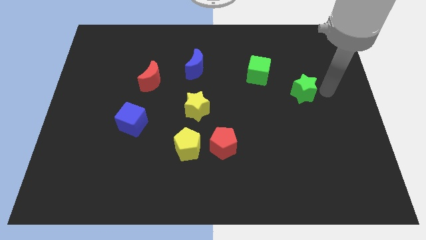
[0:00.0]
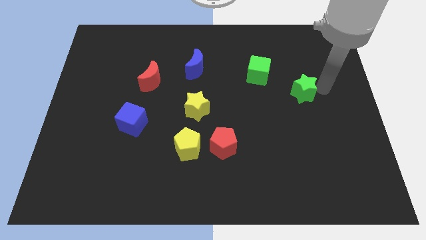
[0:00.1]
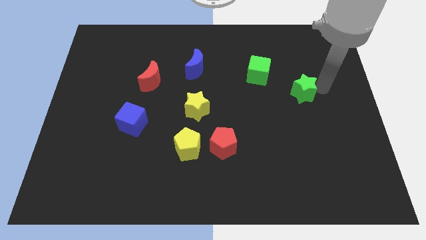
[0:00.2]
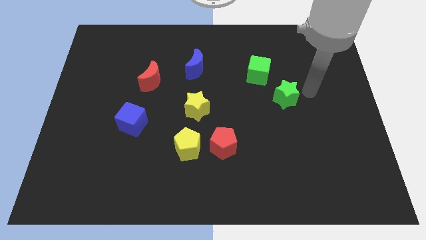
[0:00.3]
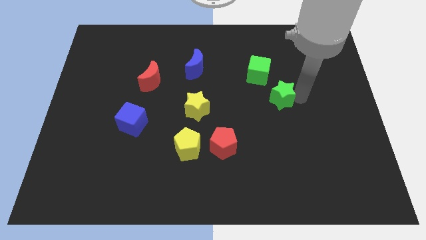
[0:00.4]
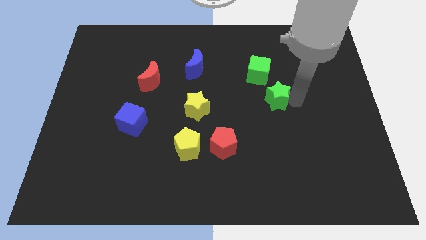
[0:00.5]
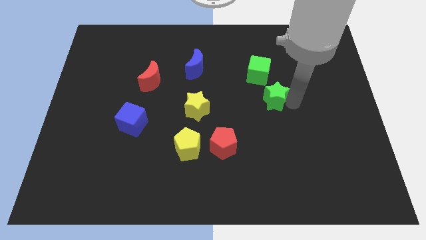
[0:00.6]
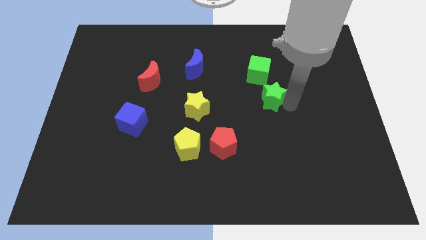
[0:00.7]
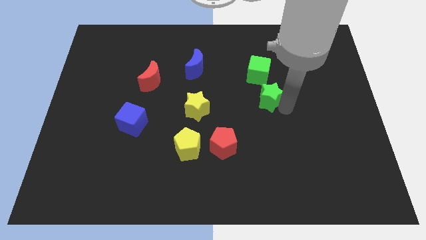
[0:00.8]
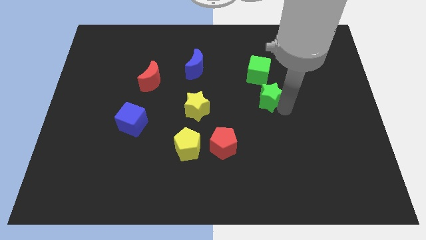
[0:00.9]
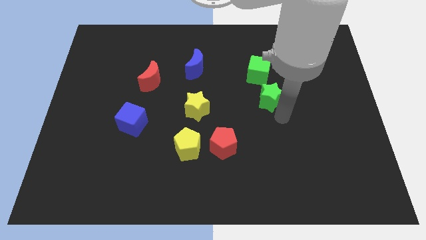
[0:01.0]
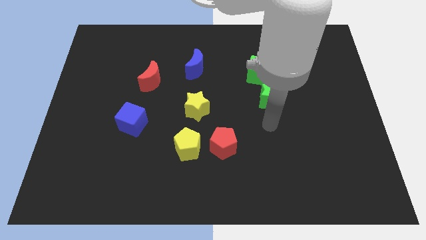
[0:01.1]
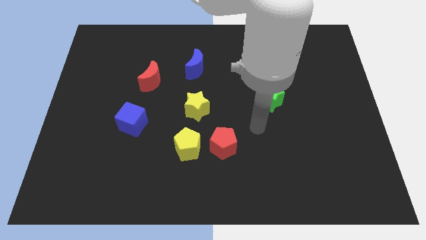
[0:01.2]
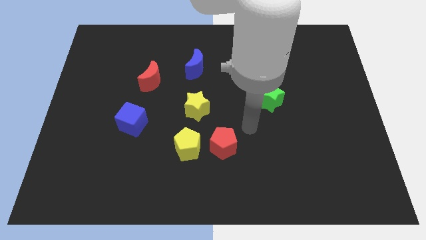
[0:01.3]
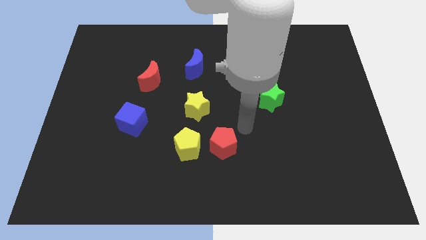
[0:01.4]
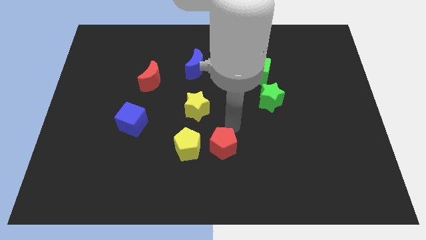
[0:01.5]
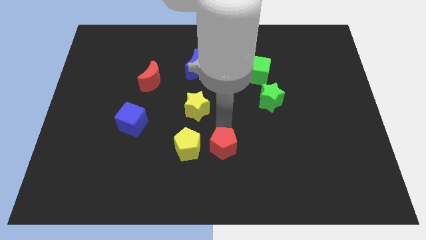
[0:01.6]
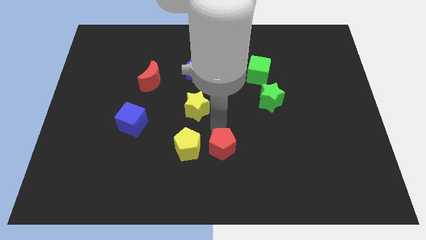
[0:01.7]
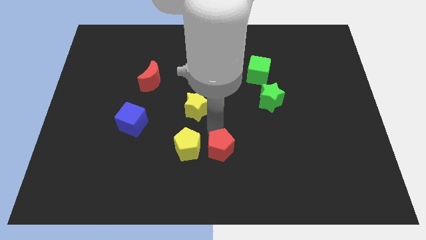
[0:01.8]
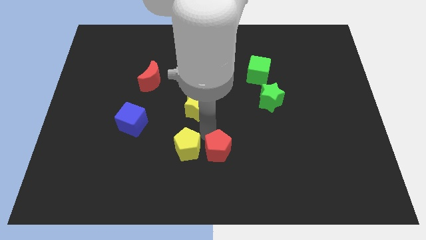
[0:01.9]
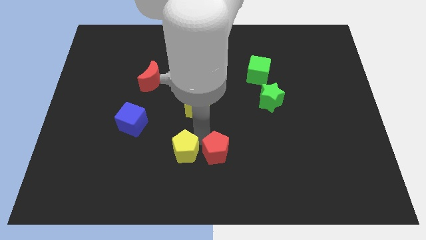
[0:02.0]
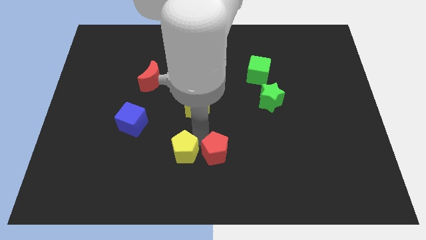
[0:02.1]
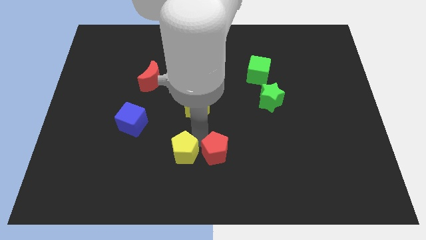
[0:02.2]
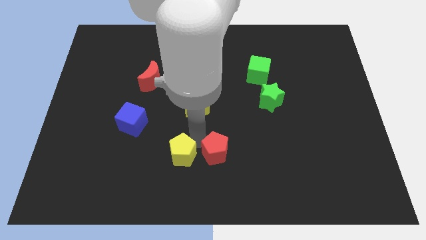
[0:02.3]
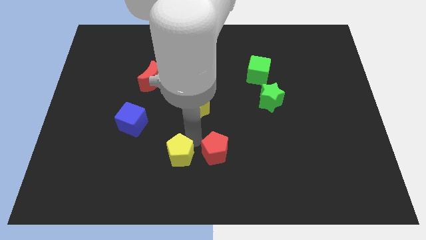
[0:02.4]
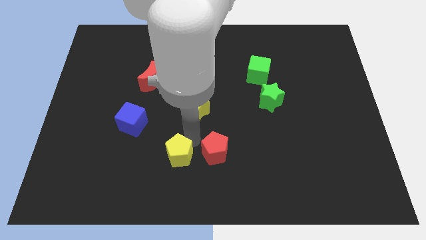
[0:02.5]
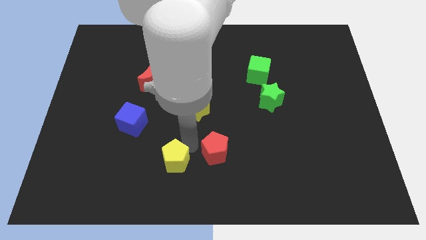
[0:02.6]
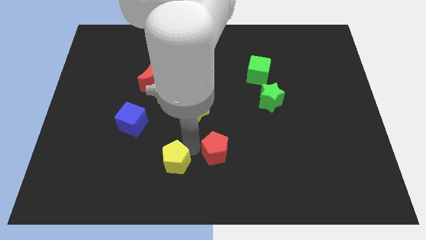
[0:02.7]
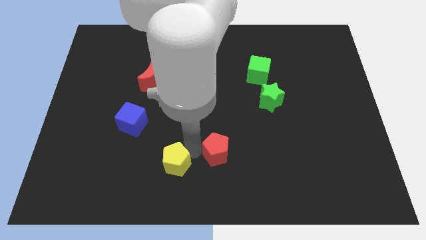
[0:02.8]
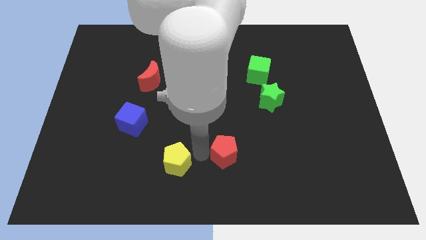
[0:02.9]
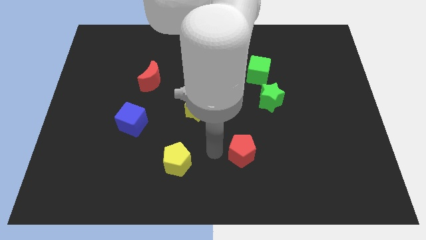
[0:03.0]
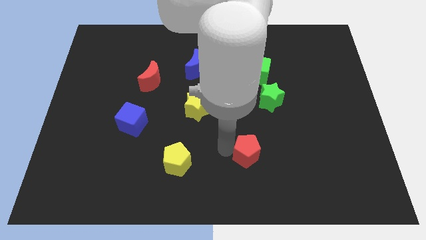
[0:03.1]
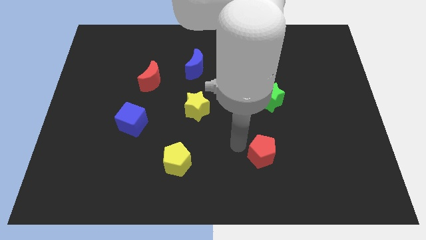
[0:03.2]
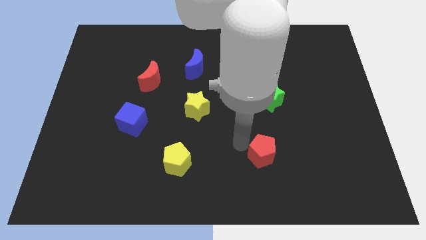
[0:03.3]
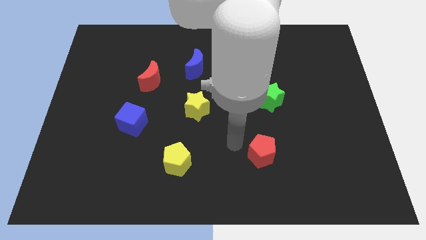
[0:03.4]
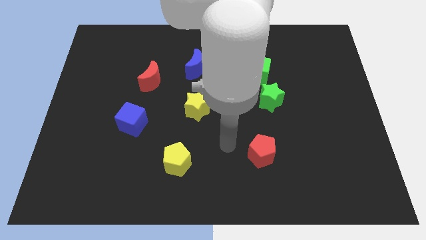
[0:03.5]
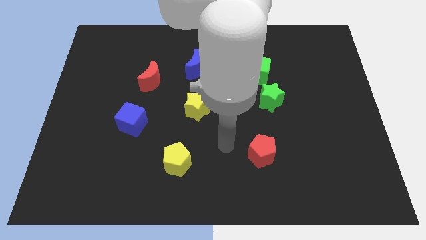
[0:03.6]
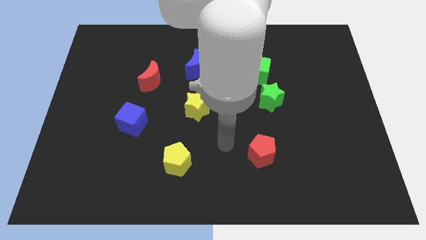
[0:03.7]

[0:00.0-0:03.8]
push the green staryellow pentagon and red pentagon

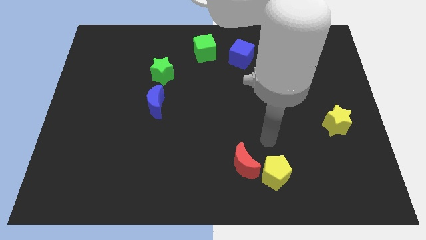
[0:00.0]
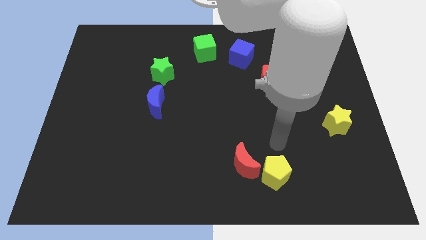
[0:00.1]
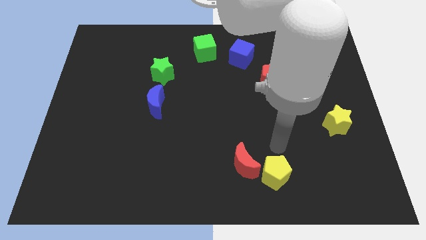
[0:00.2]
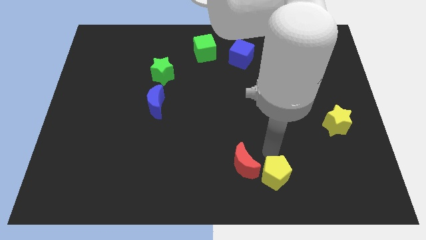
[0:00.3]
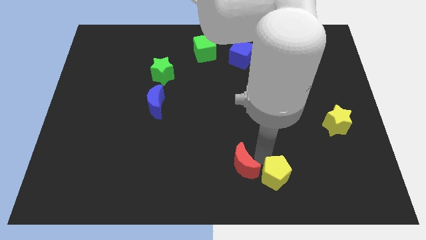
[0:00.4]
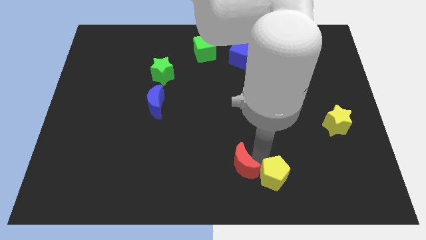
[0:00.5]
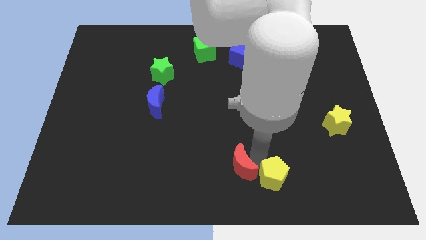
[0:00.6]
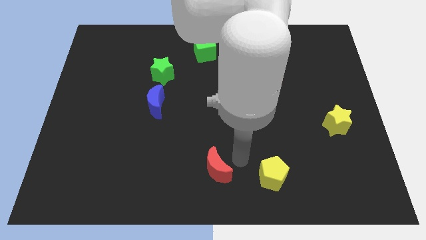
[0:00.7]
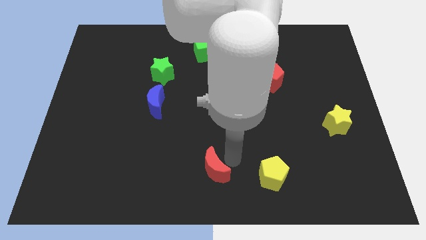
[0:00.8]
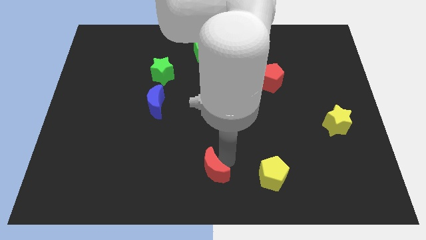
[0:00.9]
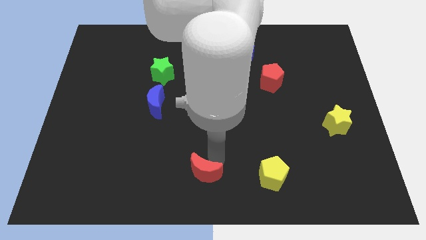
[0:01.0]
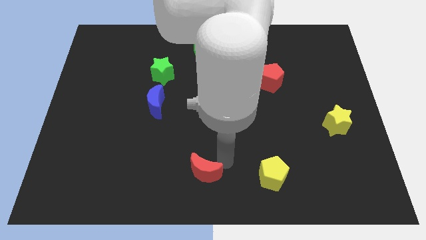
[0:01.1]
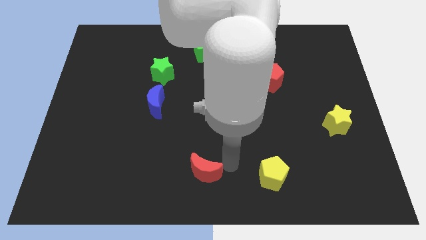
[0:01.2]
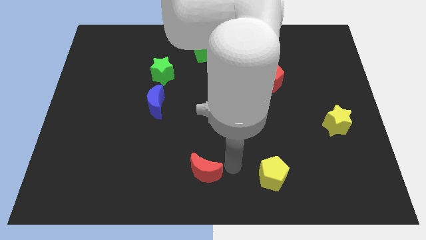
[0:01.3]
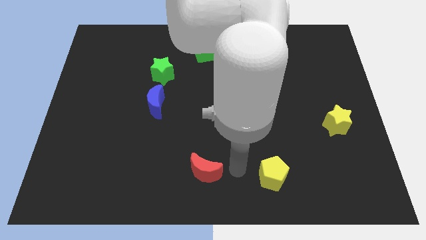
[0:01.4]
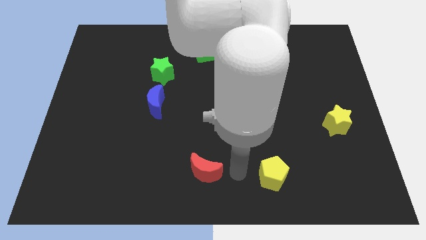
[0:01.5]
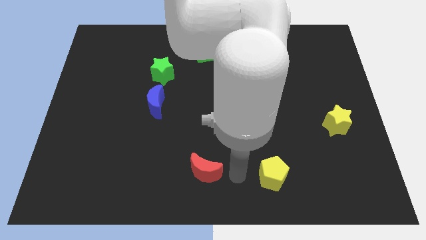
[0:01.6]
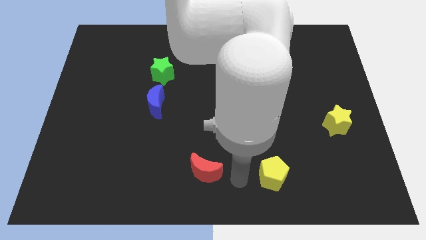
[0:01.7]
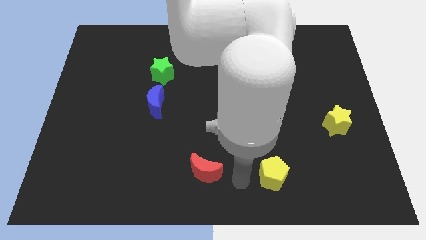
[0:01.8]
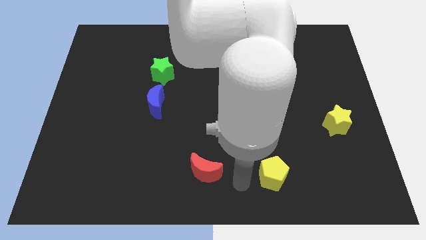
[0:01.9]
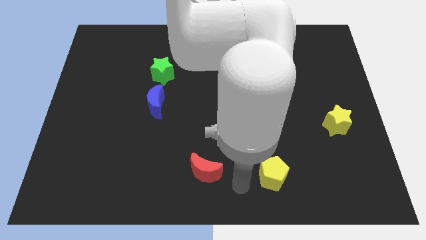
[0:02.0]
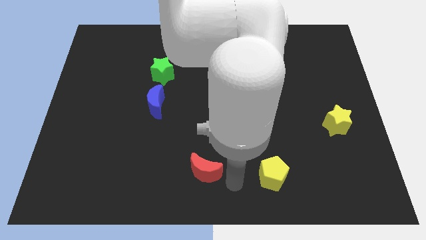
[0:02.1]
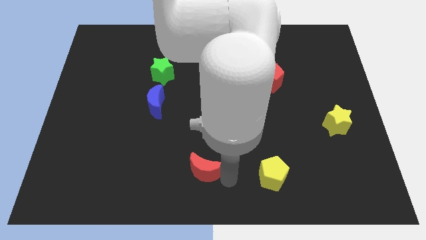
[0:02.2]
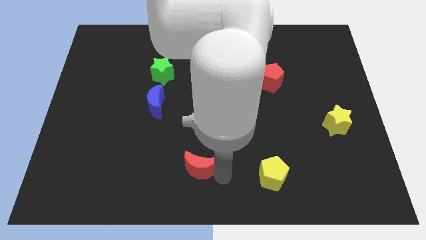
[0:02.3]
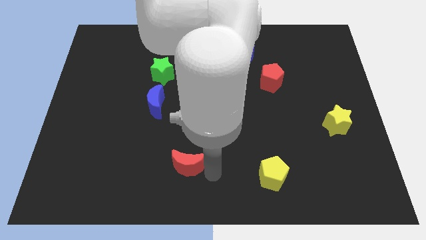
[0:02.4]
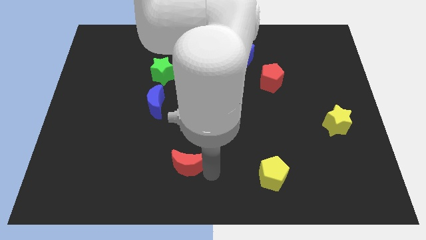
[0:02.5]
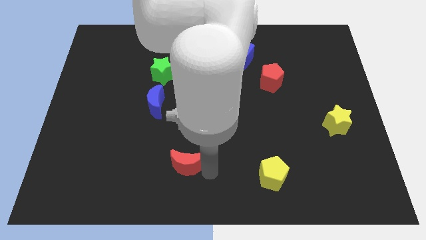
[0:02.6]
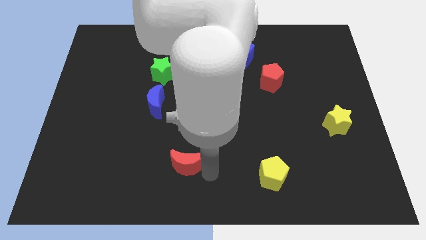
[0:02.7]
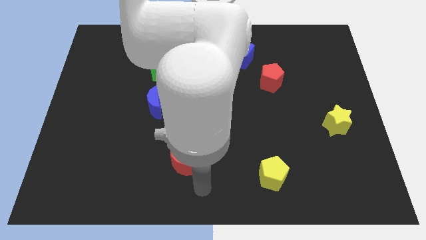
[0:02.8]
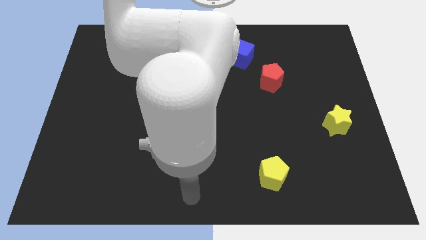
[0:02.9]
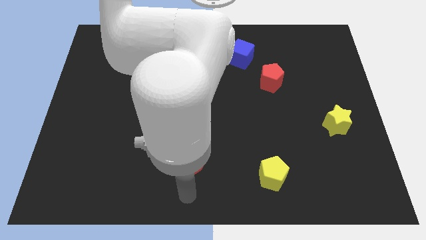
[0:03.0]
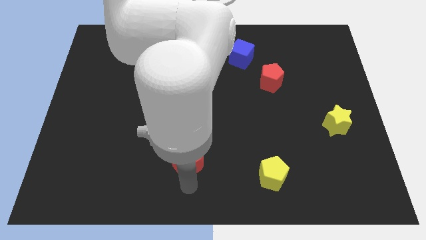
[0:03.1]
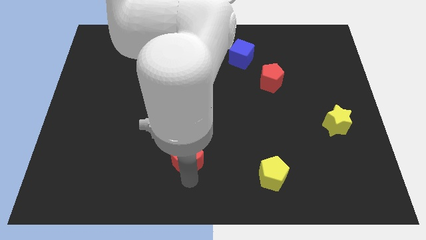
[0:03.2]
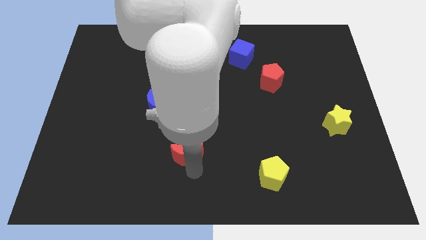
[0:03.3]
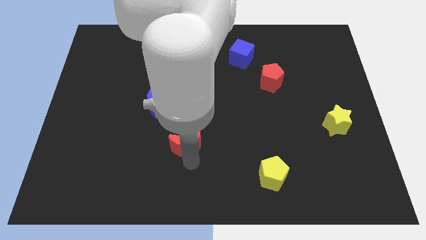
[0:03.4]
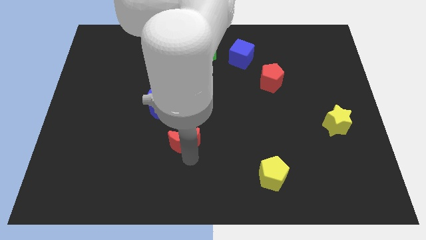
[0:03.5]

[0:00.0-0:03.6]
separate the red crescent from the yellow pentagon

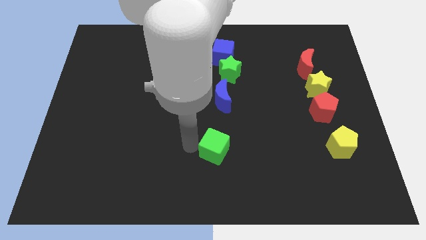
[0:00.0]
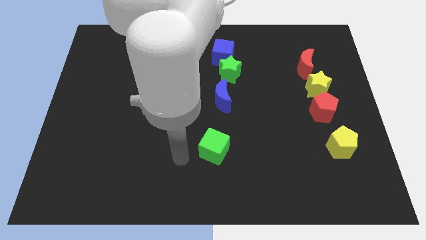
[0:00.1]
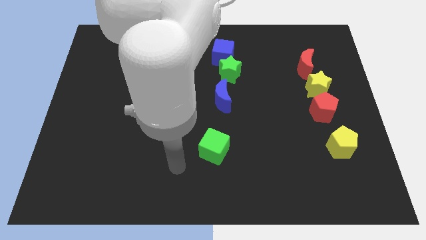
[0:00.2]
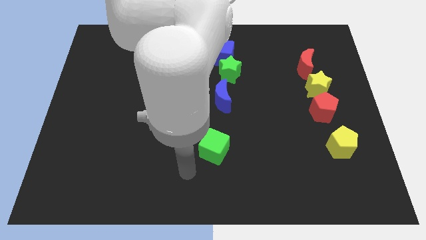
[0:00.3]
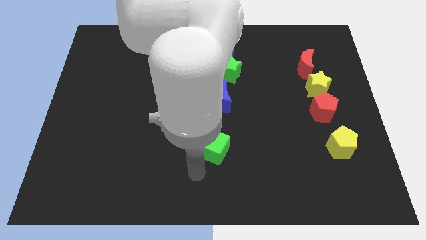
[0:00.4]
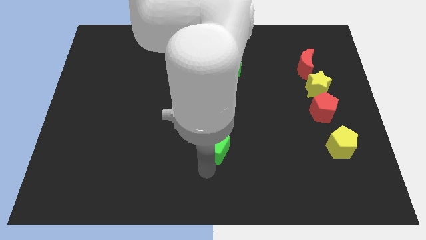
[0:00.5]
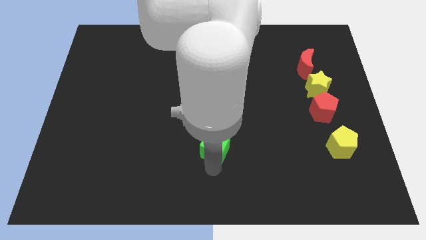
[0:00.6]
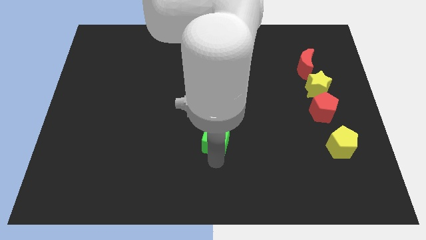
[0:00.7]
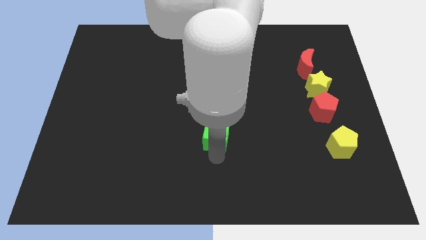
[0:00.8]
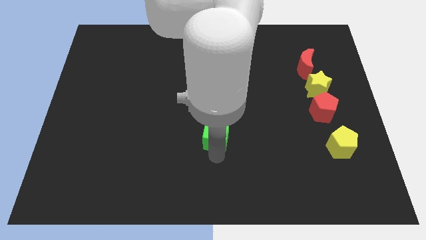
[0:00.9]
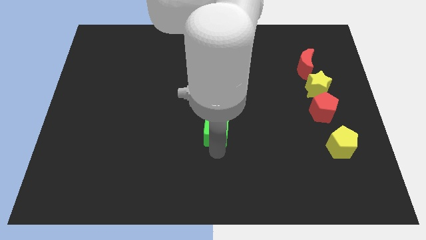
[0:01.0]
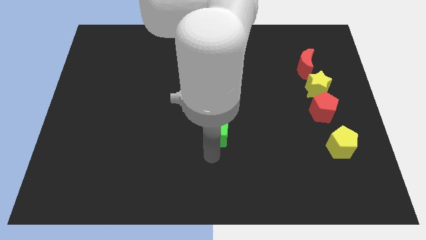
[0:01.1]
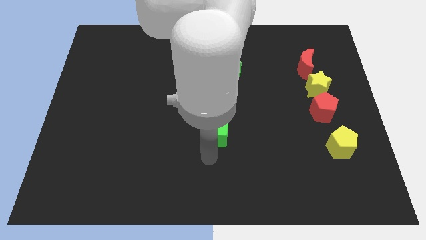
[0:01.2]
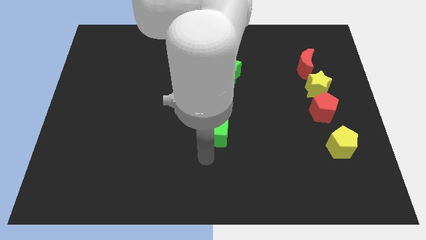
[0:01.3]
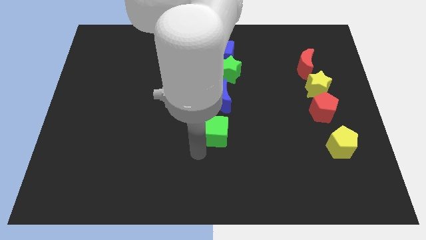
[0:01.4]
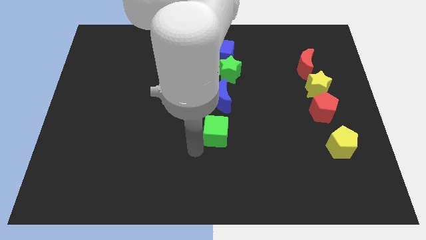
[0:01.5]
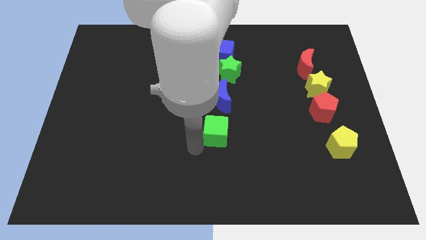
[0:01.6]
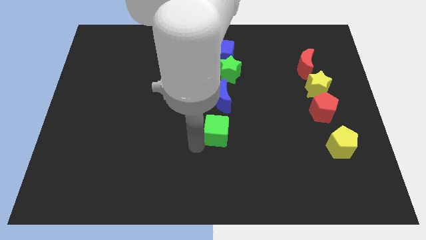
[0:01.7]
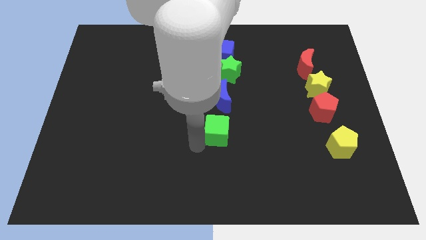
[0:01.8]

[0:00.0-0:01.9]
move the green cube to the bottom side of the blue moon
